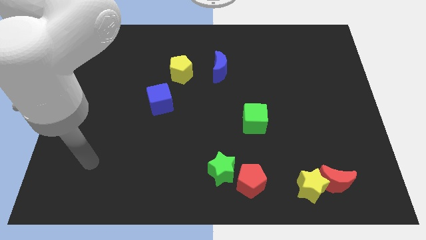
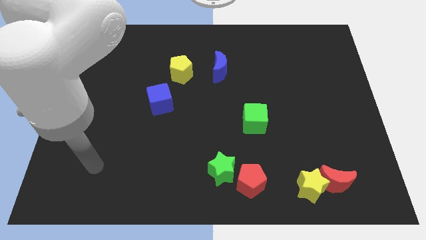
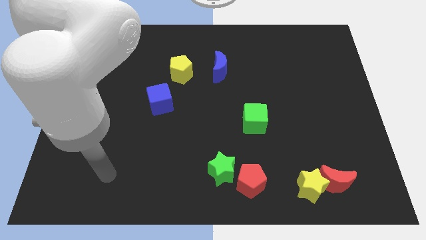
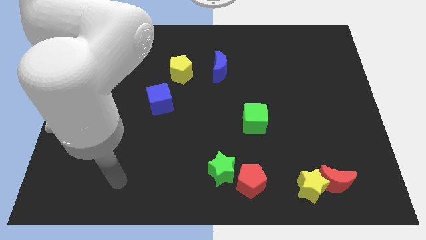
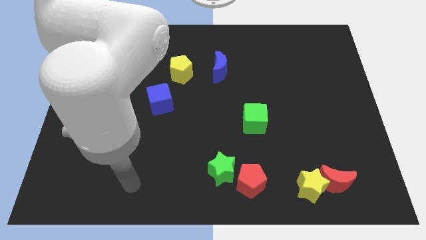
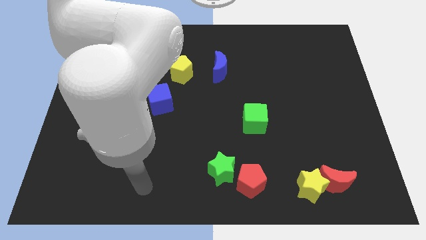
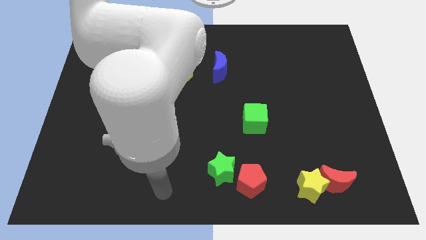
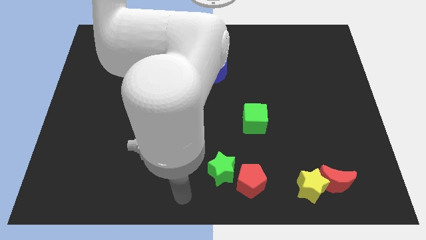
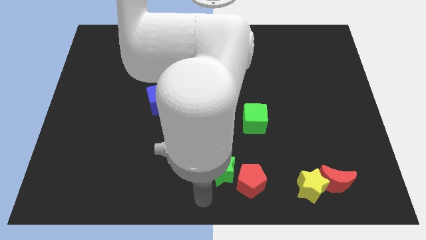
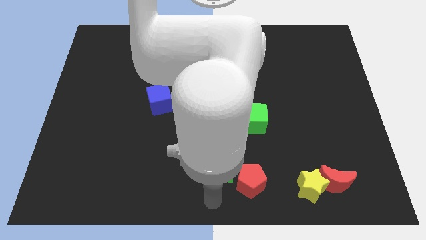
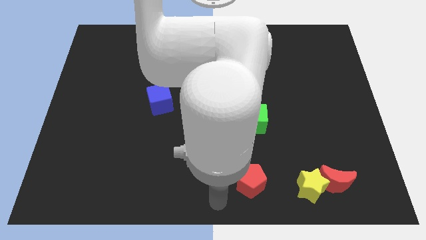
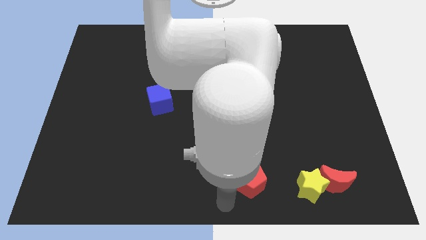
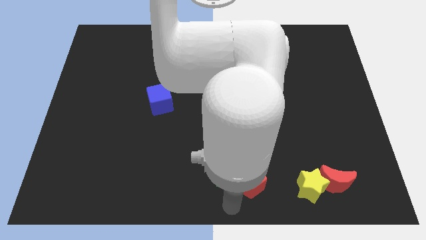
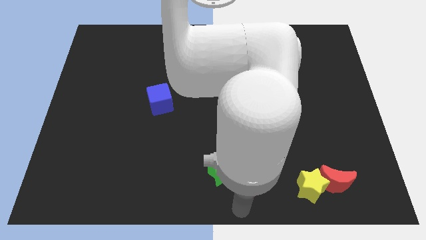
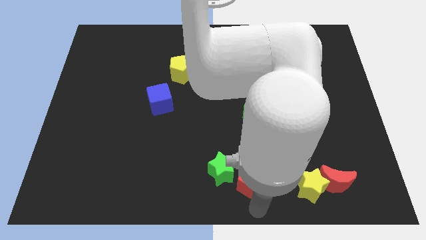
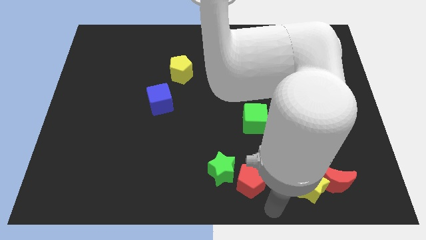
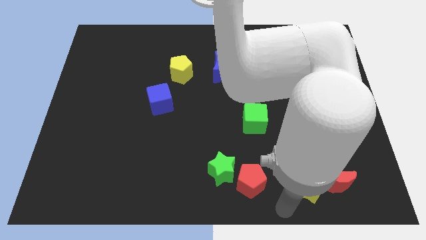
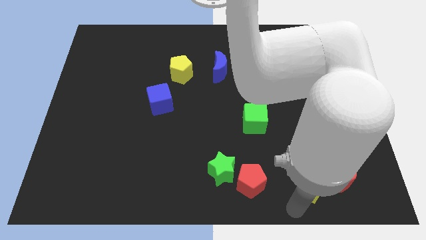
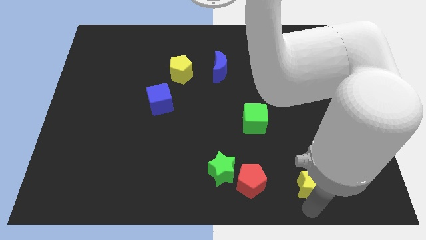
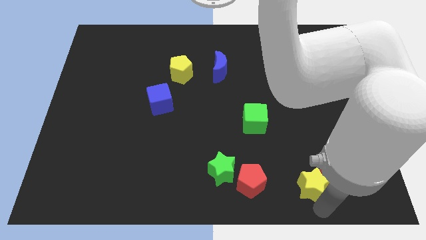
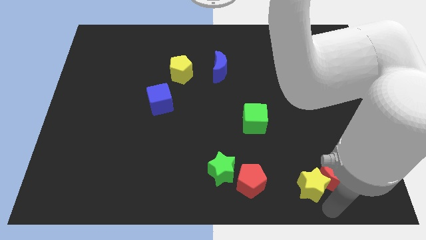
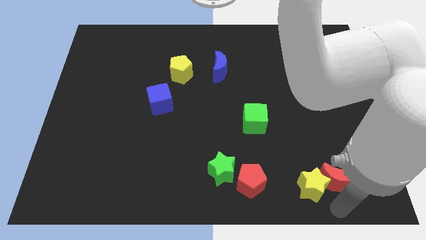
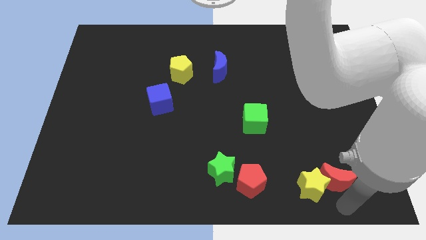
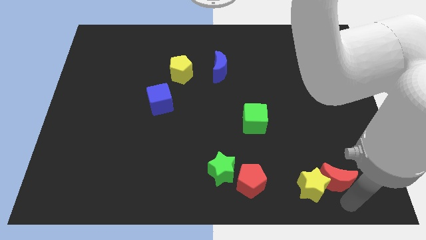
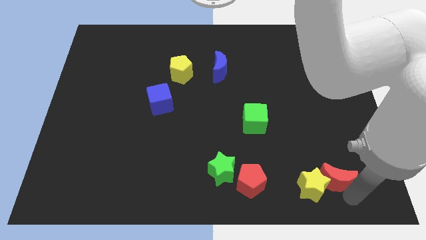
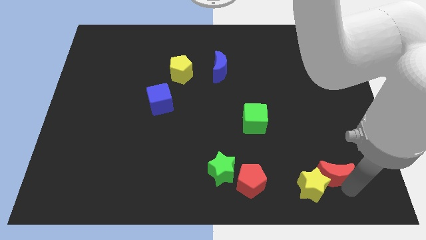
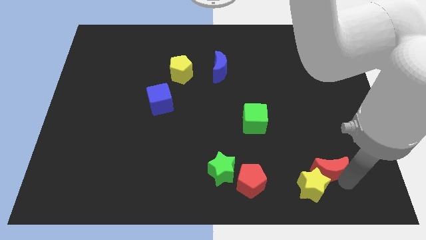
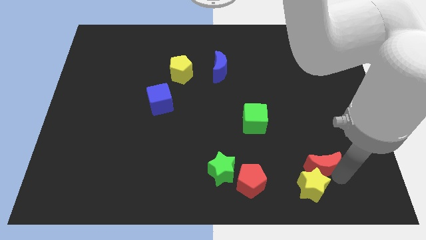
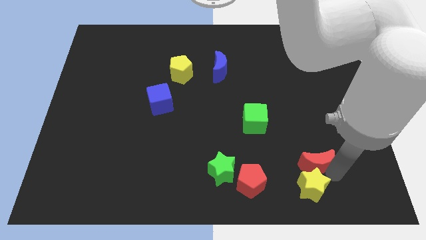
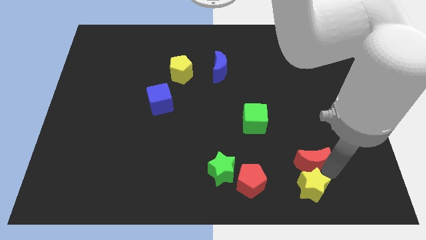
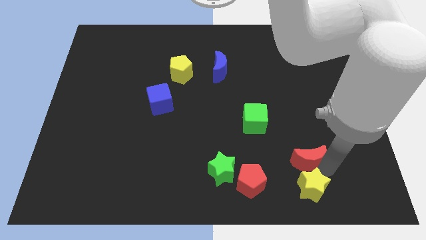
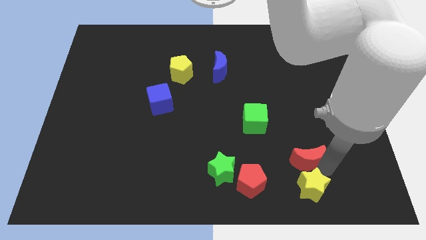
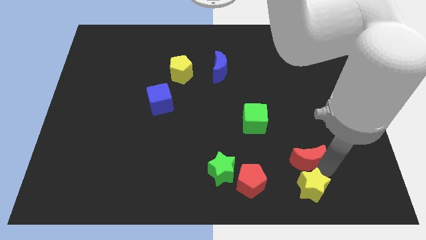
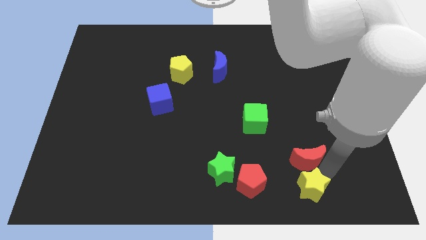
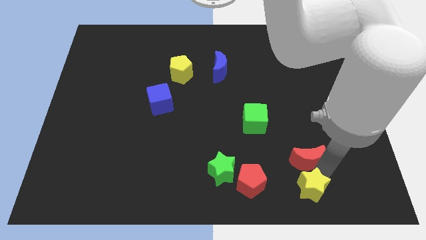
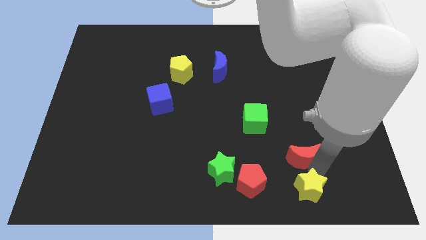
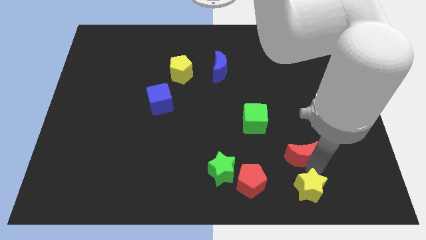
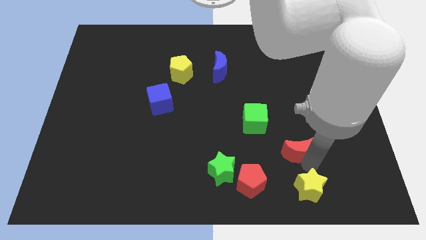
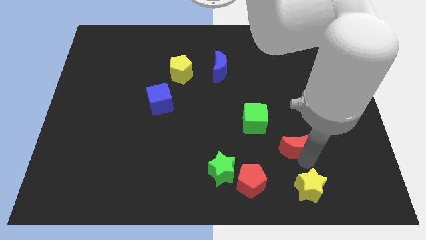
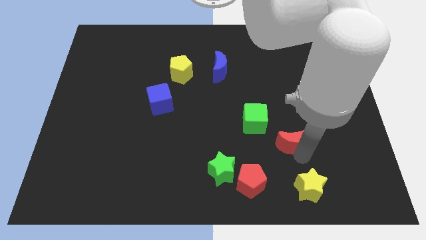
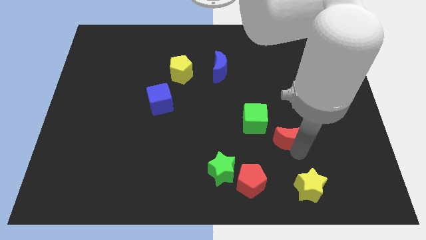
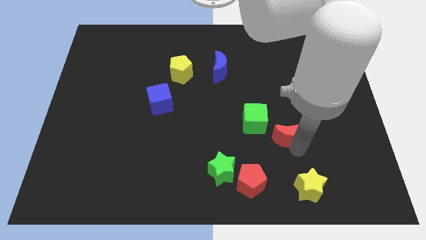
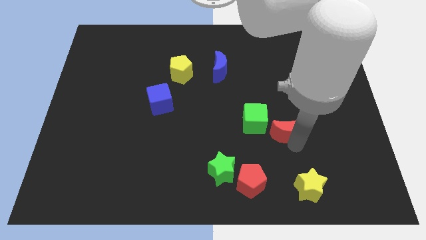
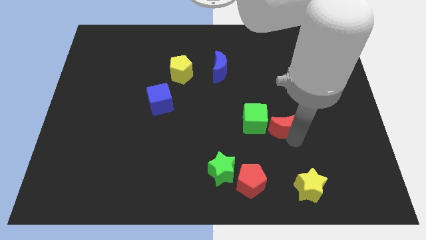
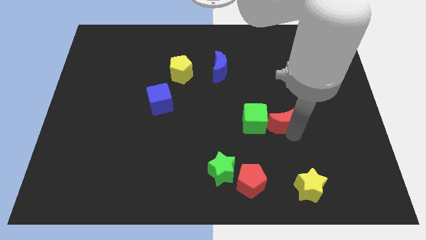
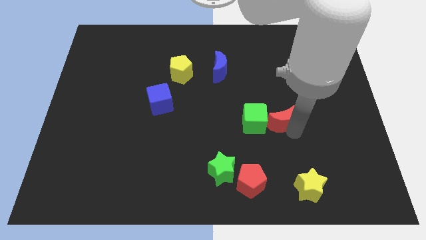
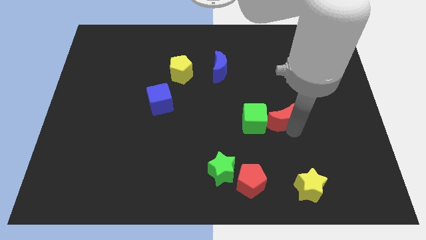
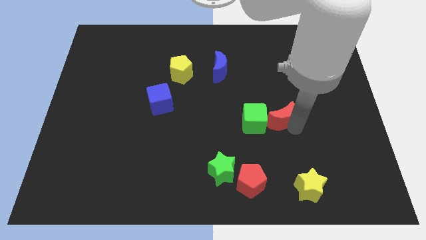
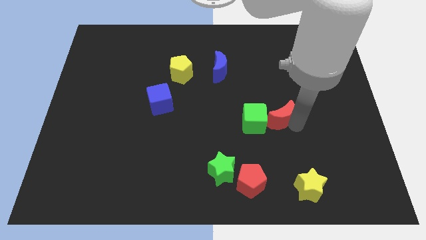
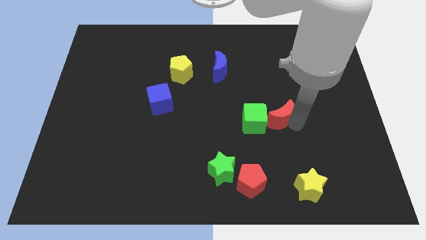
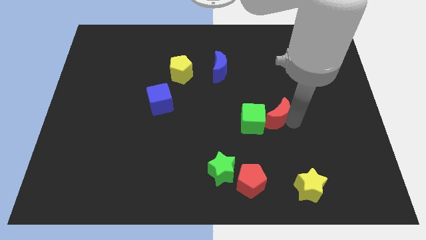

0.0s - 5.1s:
slide the red moon towards the green cube

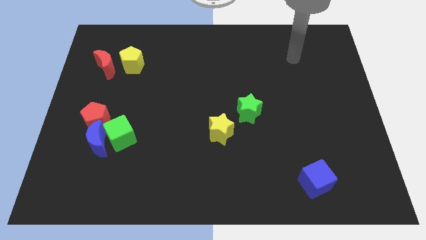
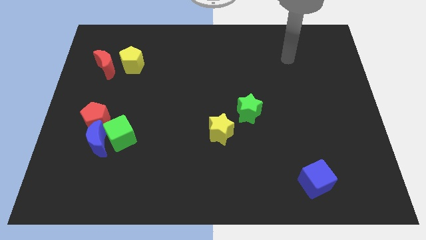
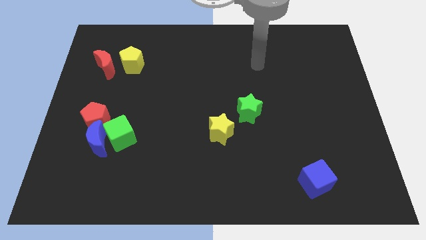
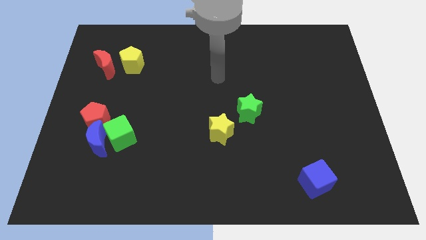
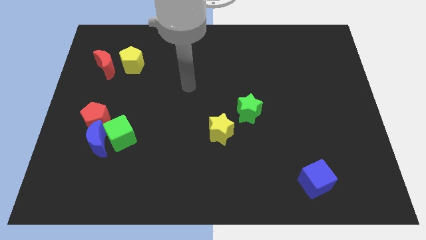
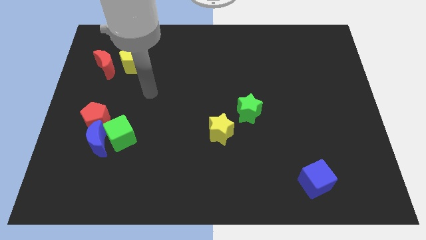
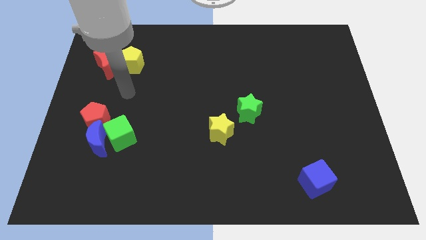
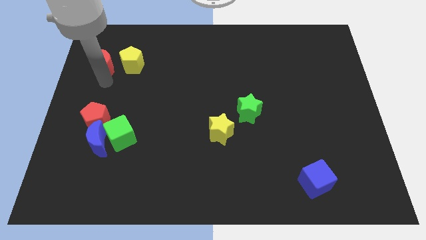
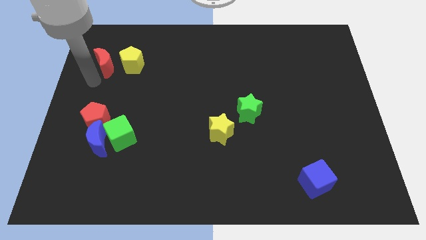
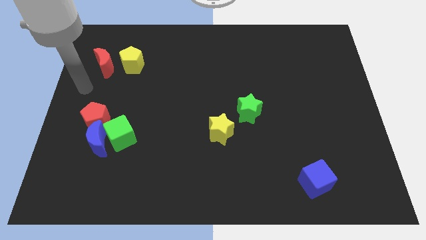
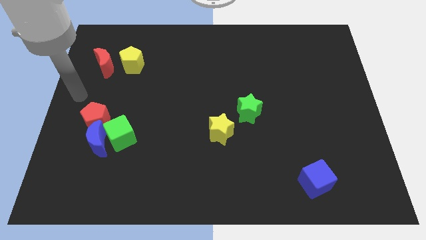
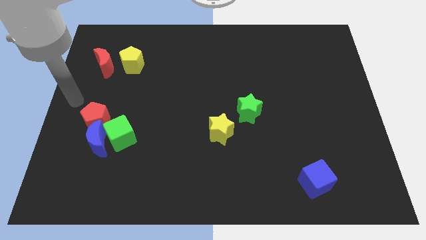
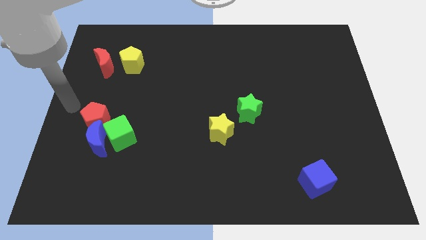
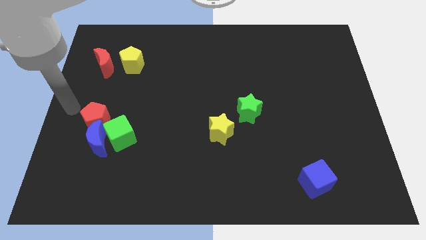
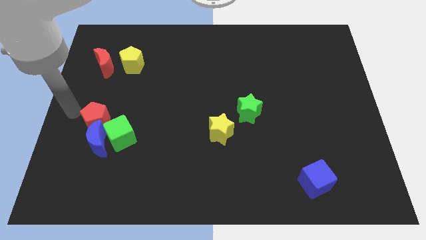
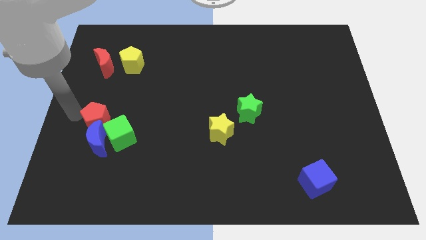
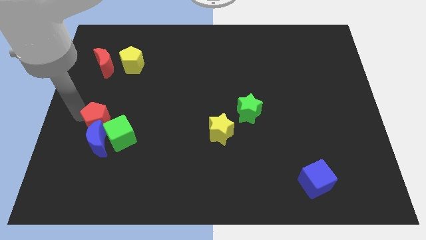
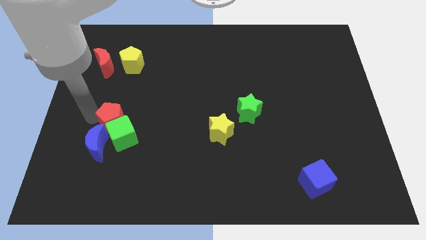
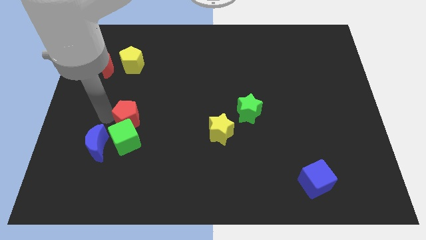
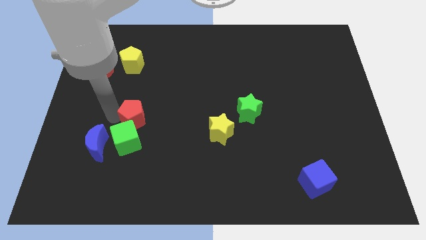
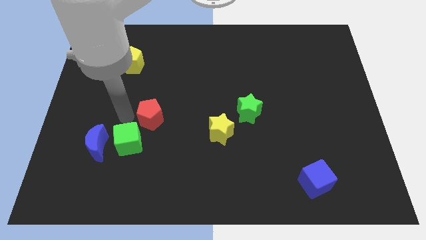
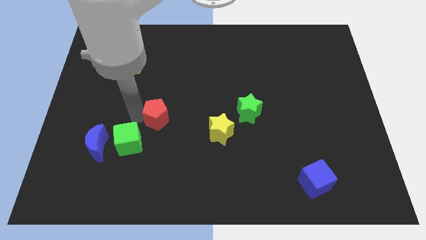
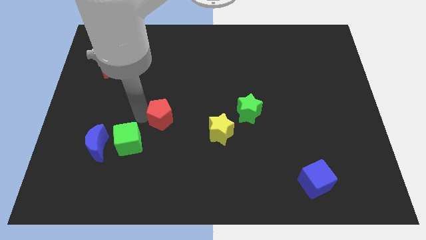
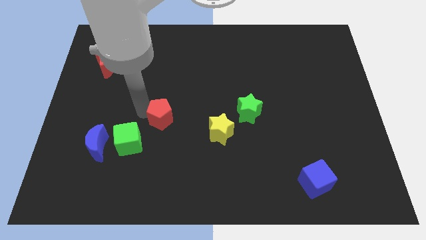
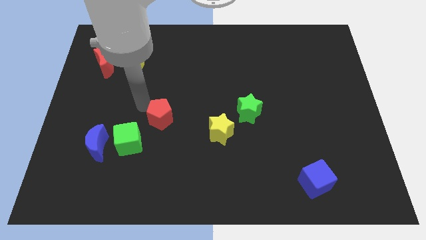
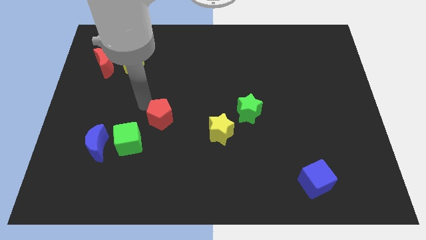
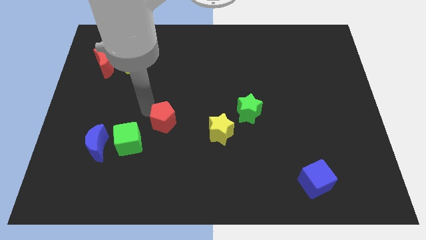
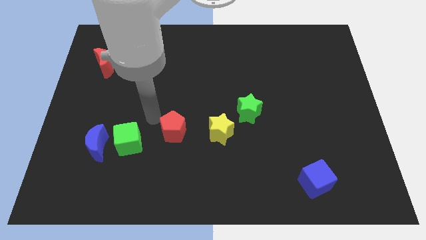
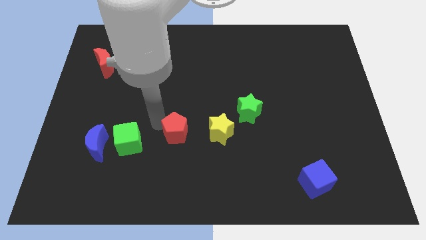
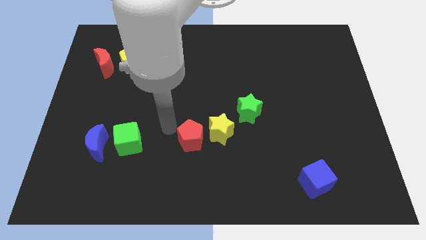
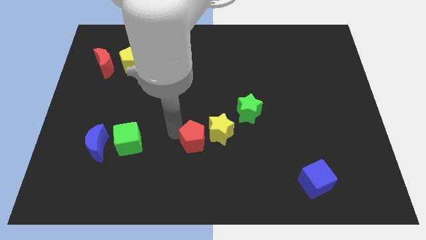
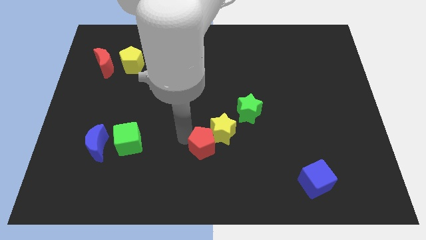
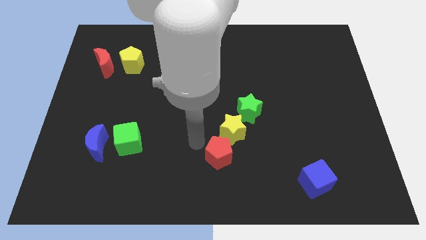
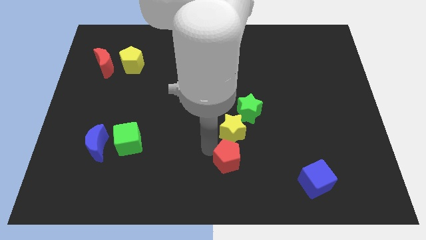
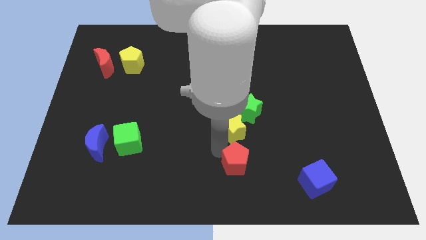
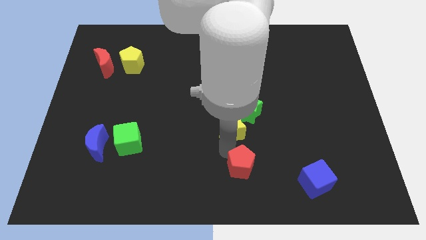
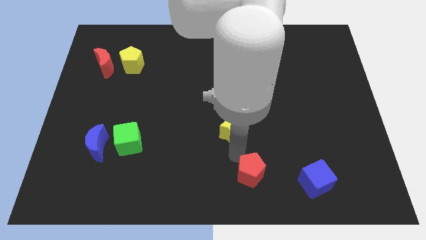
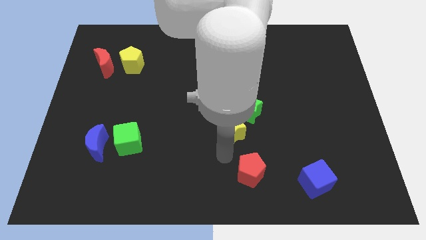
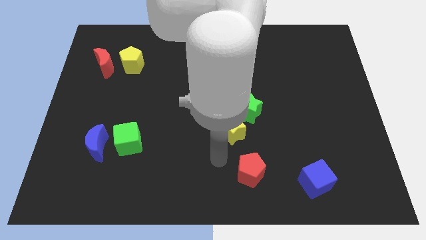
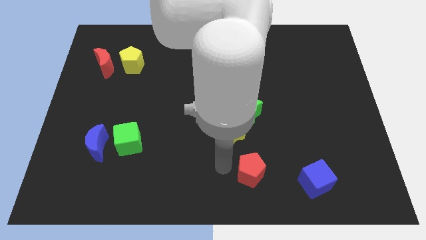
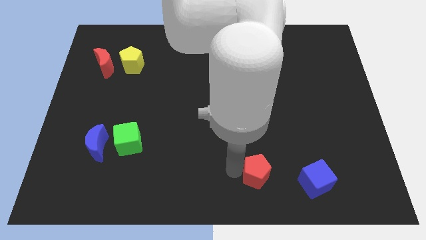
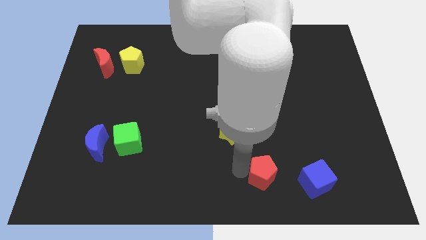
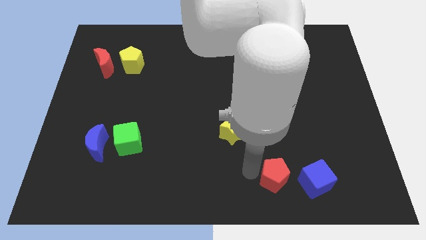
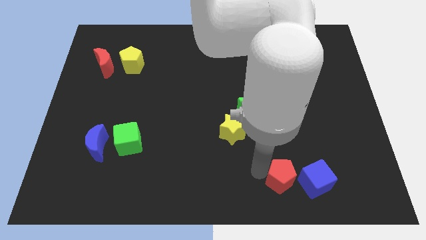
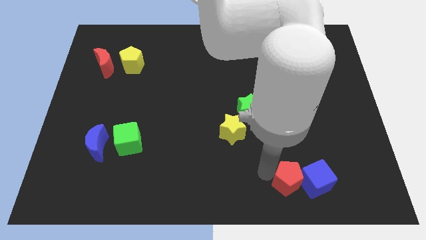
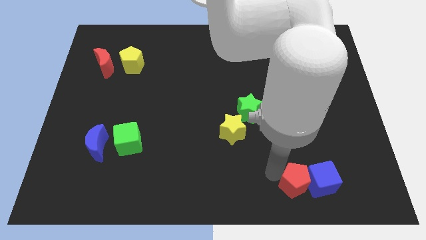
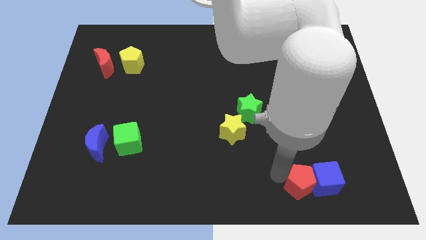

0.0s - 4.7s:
slide the red pentagon close to the blue cube
